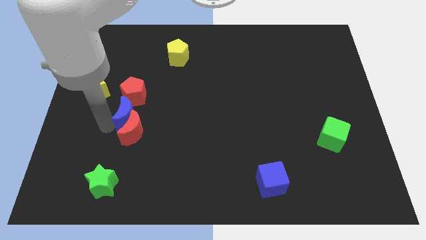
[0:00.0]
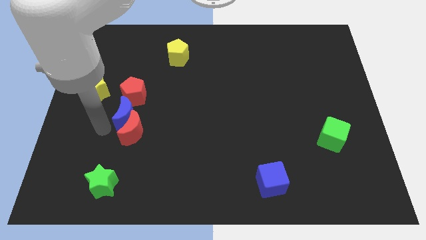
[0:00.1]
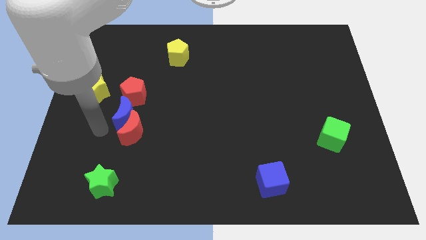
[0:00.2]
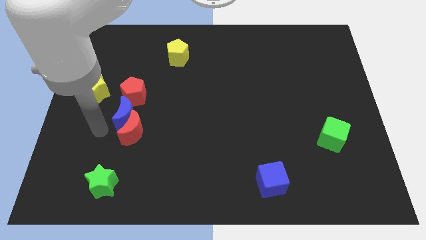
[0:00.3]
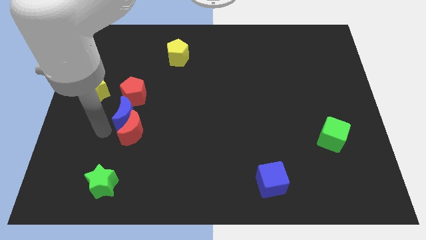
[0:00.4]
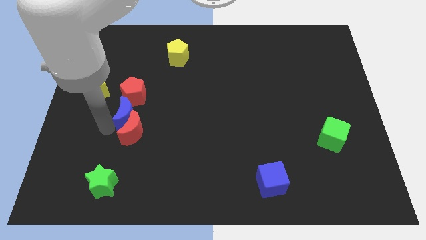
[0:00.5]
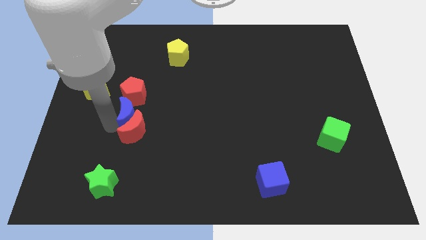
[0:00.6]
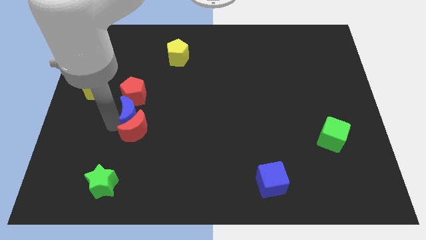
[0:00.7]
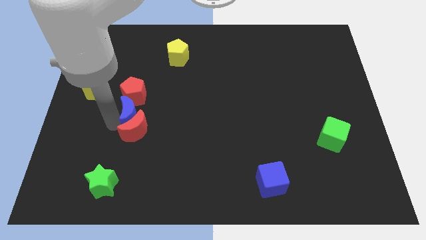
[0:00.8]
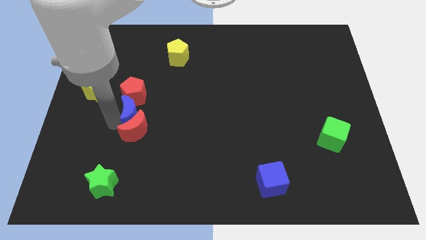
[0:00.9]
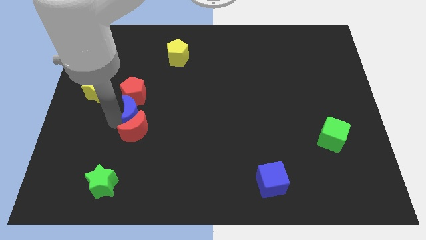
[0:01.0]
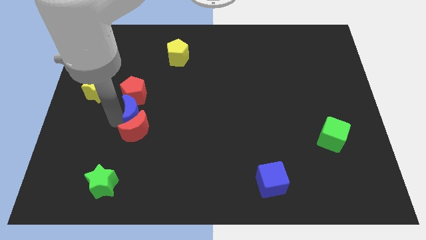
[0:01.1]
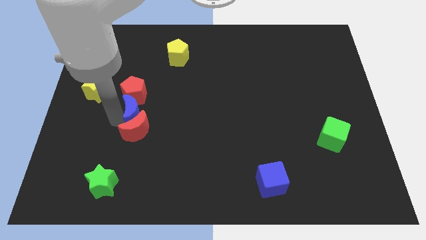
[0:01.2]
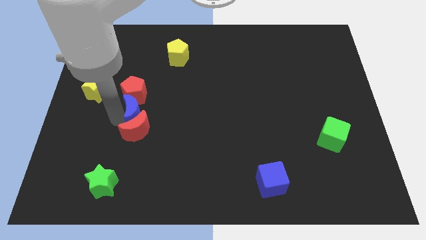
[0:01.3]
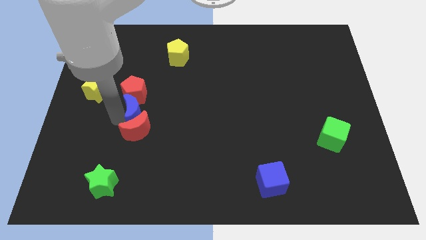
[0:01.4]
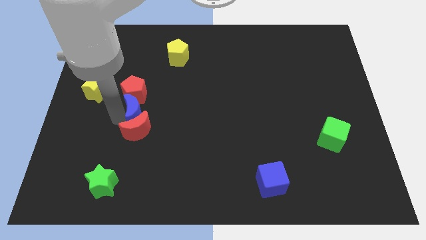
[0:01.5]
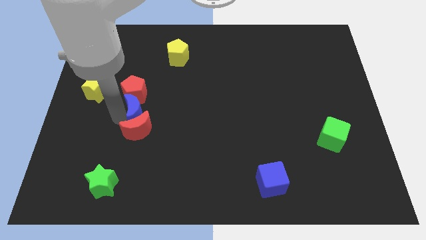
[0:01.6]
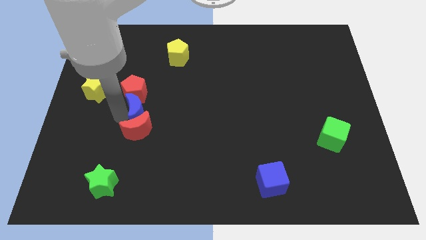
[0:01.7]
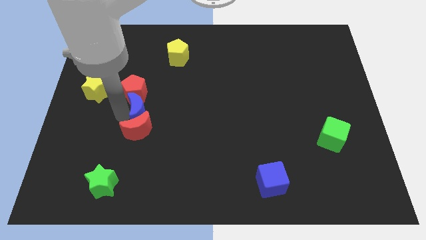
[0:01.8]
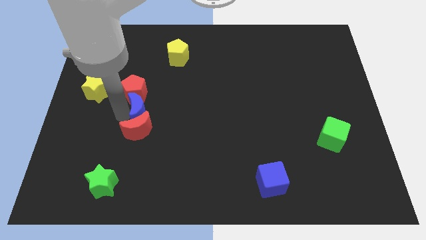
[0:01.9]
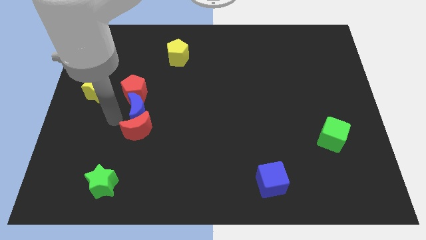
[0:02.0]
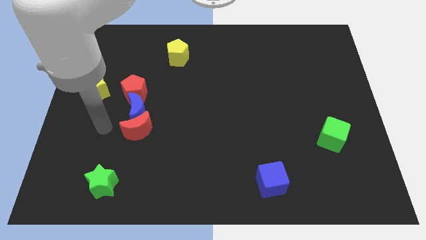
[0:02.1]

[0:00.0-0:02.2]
move the blue moon below the red pentagon

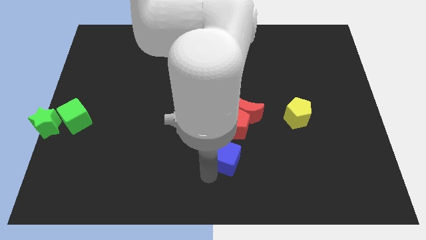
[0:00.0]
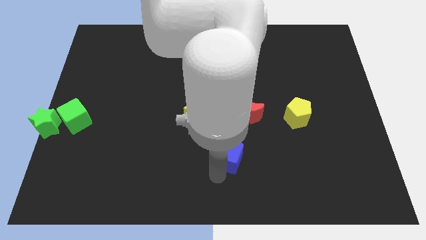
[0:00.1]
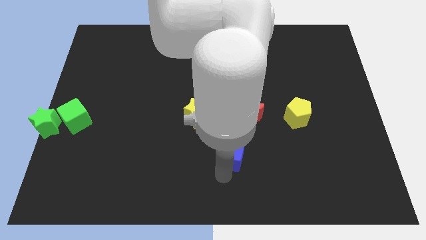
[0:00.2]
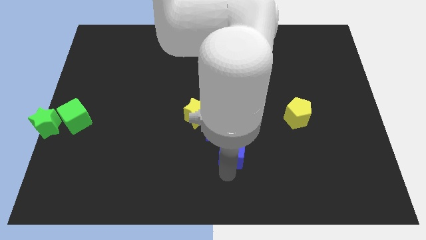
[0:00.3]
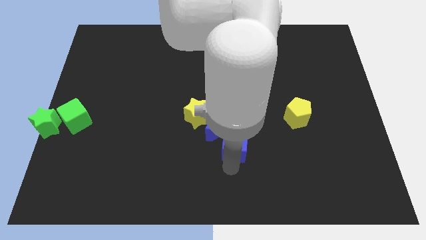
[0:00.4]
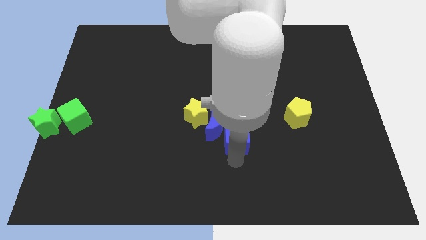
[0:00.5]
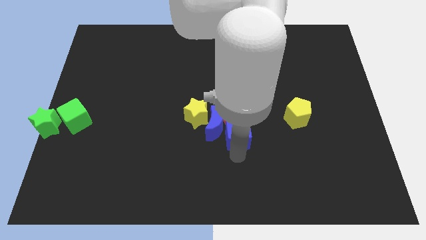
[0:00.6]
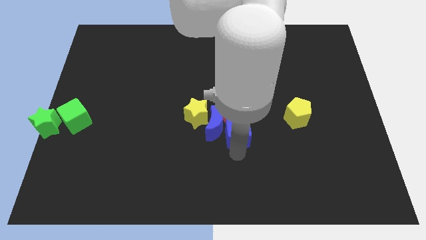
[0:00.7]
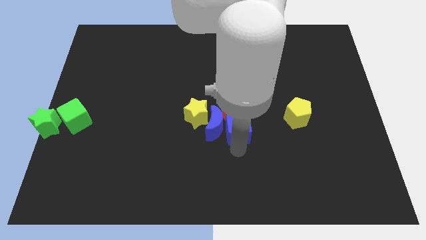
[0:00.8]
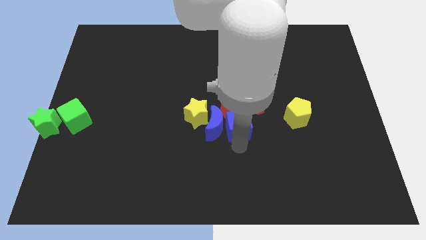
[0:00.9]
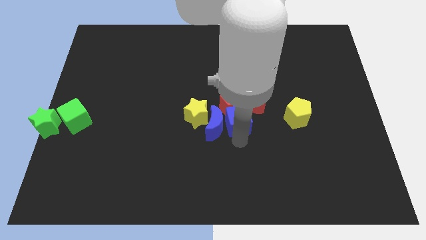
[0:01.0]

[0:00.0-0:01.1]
place blue cube to right of blue moon

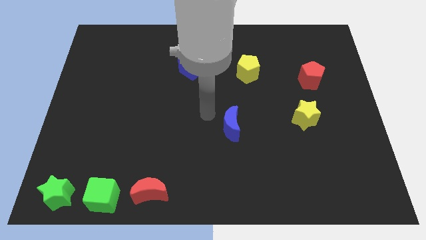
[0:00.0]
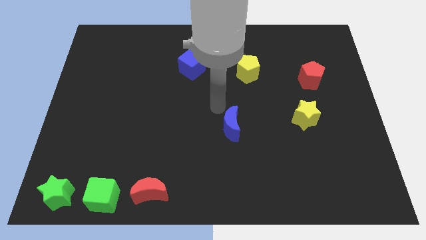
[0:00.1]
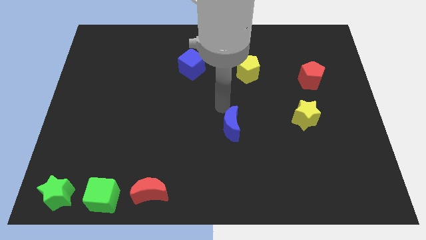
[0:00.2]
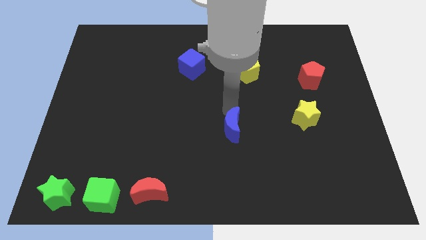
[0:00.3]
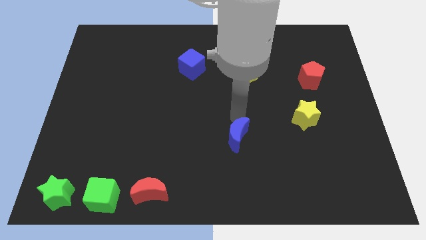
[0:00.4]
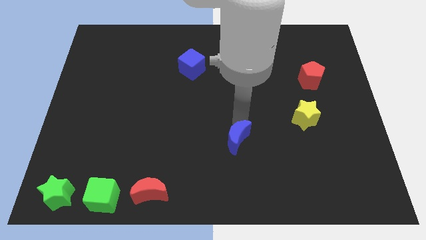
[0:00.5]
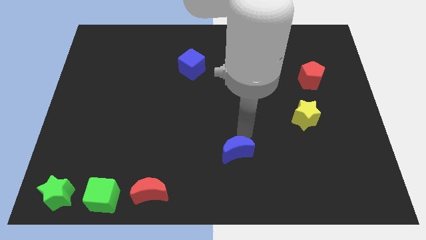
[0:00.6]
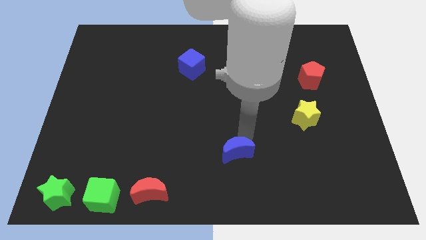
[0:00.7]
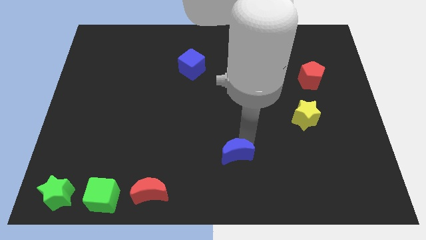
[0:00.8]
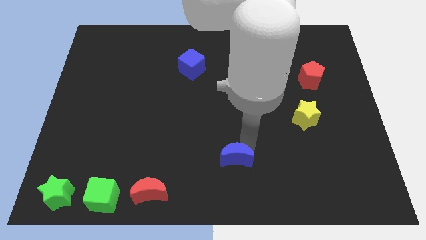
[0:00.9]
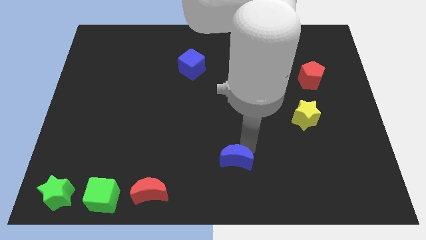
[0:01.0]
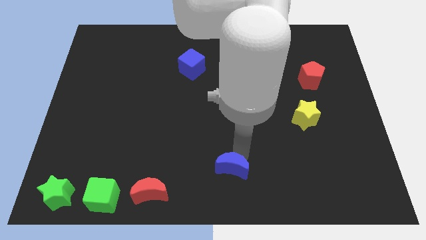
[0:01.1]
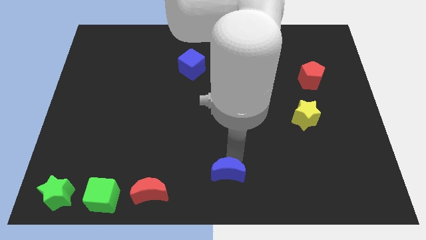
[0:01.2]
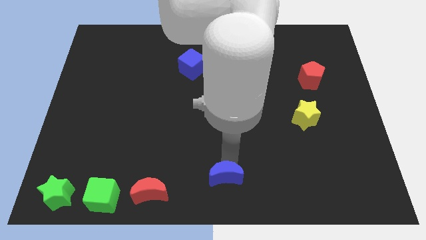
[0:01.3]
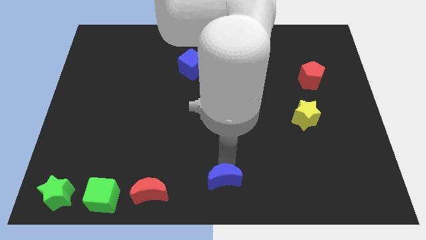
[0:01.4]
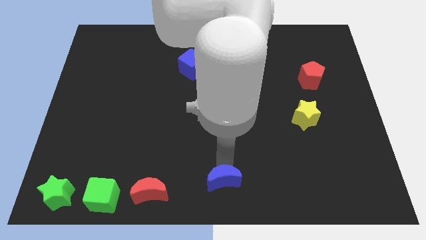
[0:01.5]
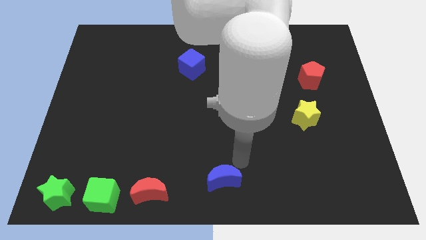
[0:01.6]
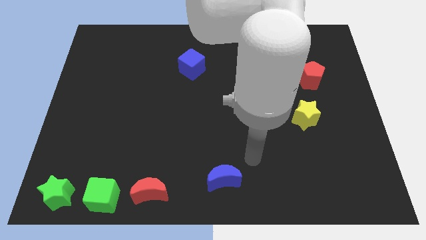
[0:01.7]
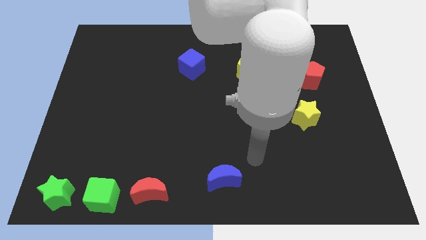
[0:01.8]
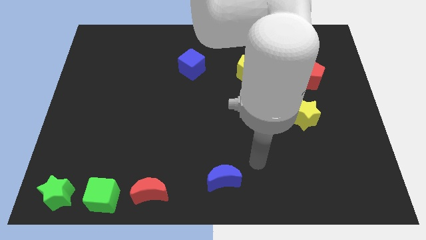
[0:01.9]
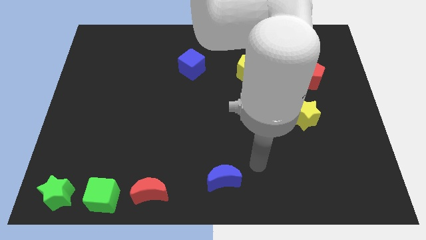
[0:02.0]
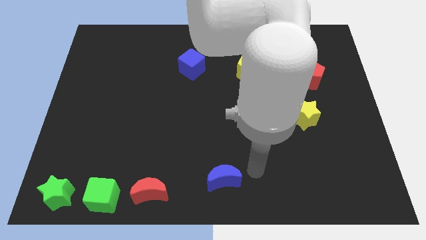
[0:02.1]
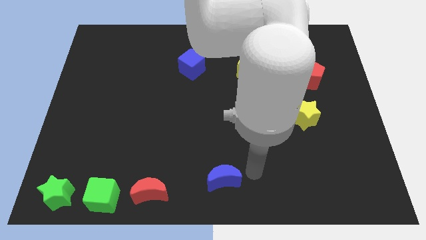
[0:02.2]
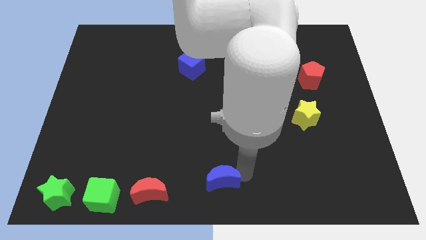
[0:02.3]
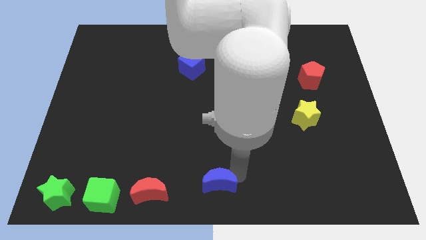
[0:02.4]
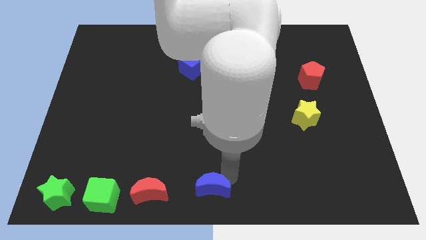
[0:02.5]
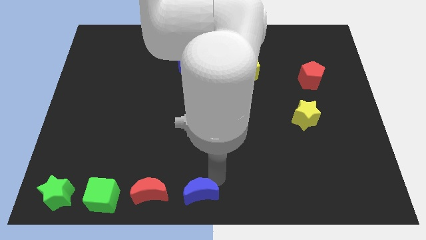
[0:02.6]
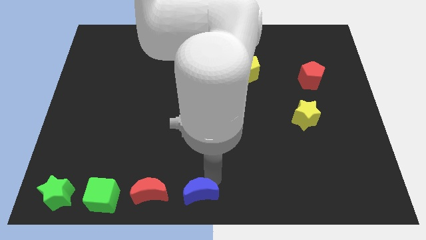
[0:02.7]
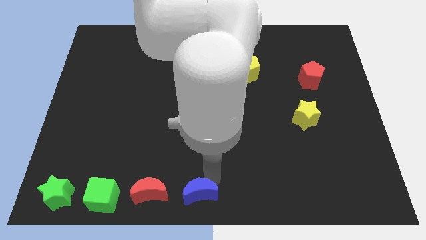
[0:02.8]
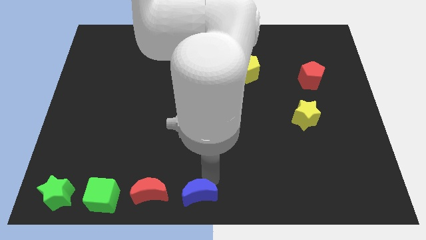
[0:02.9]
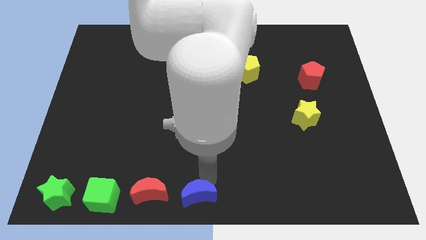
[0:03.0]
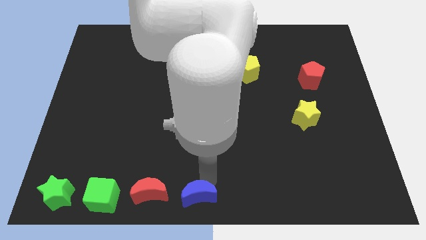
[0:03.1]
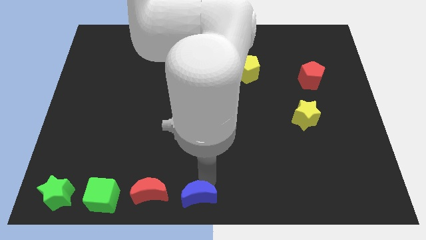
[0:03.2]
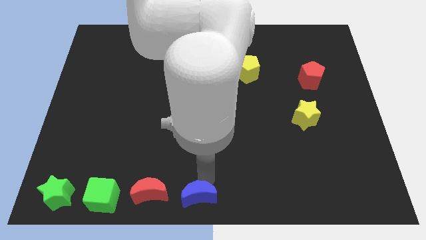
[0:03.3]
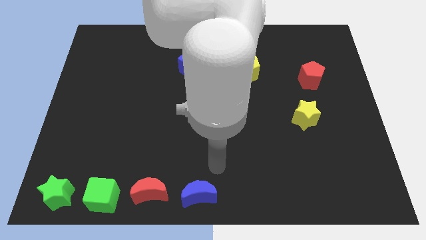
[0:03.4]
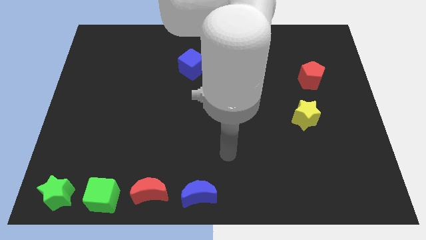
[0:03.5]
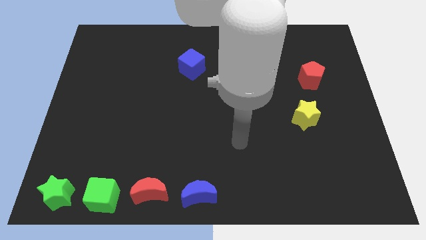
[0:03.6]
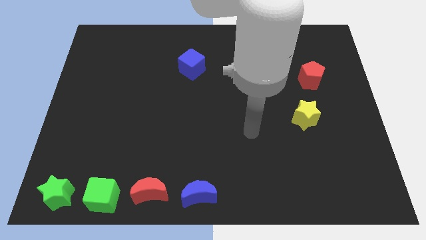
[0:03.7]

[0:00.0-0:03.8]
push the blue crescent to the bottom center of the board

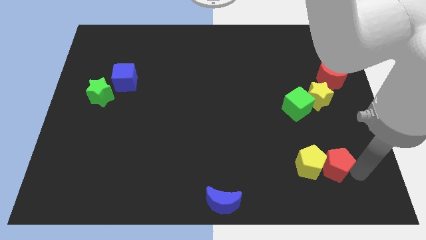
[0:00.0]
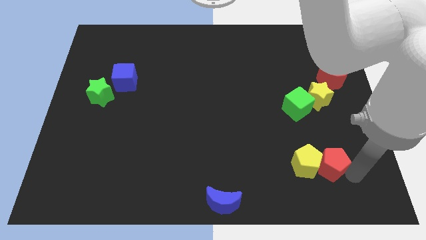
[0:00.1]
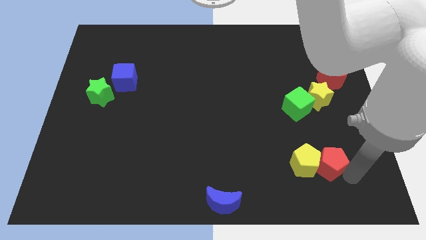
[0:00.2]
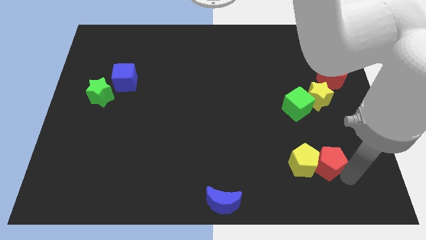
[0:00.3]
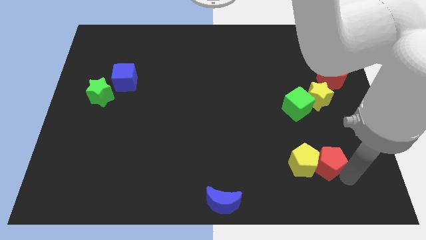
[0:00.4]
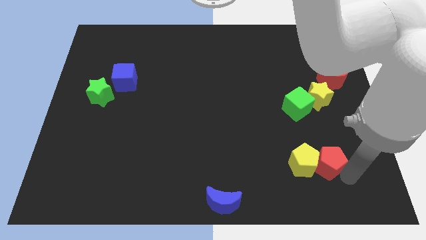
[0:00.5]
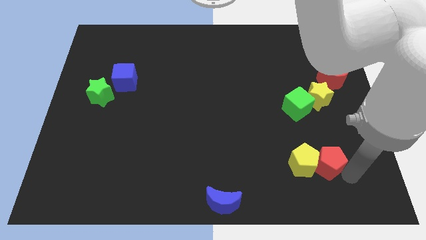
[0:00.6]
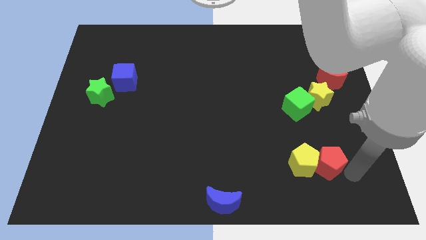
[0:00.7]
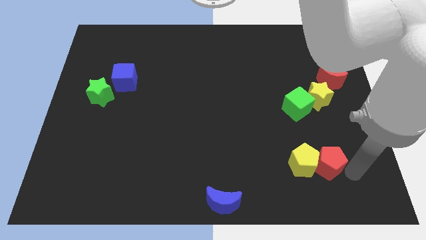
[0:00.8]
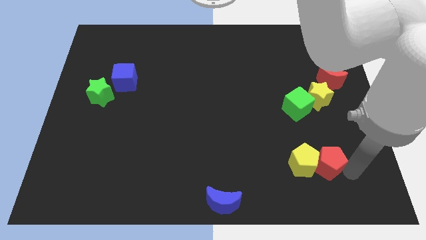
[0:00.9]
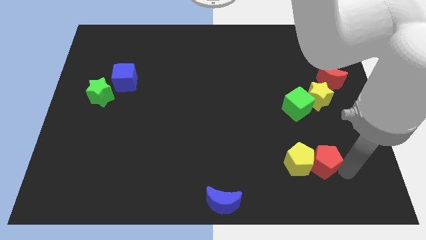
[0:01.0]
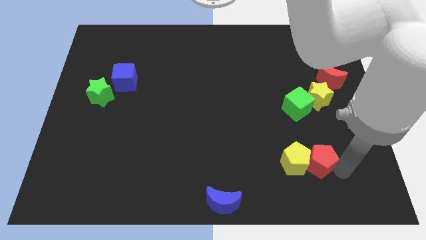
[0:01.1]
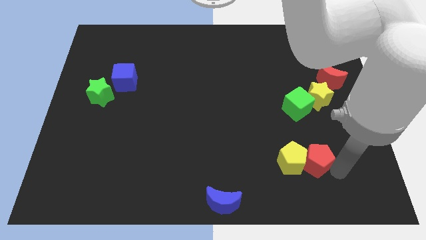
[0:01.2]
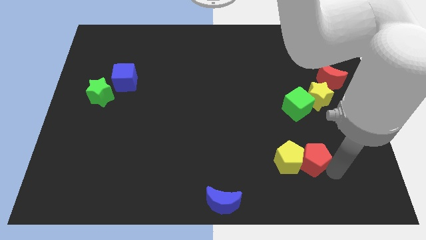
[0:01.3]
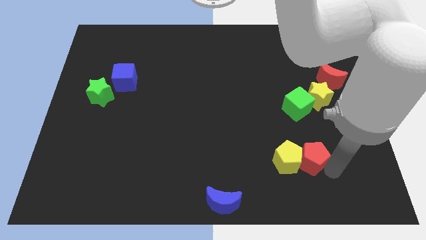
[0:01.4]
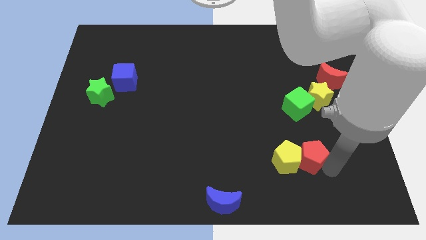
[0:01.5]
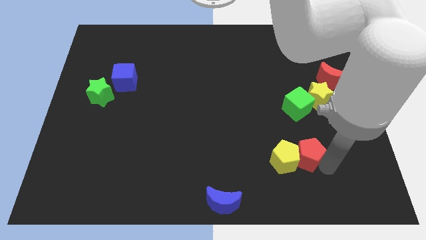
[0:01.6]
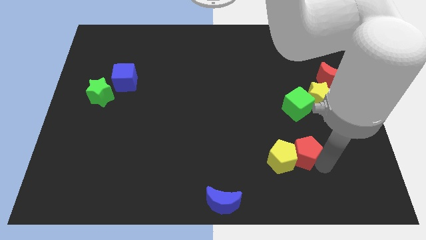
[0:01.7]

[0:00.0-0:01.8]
push the red pentagon into the yellow pentagon
